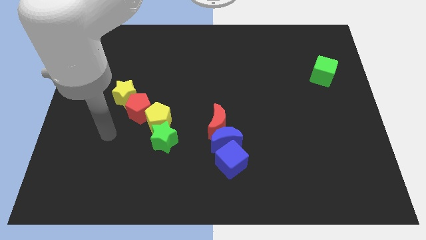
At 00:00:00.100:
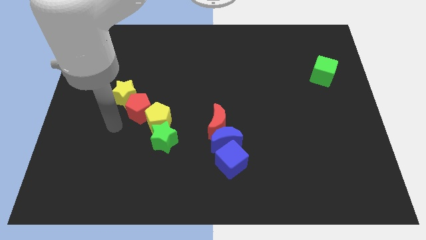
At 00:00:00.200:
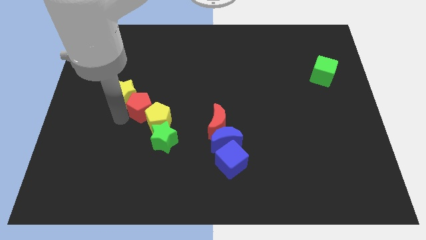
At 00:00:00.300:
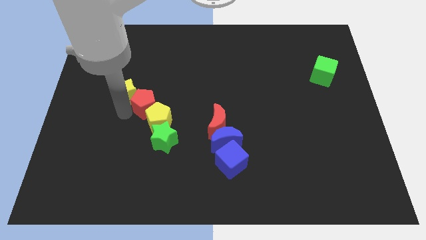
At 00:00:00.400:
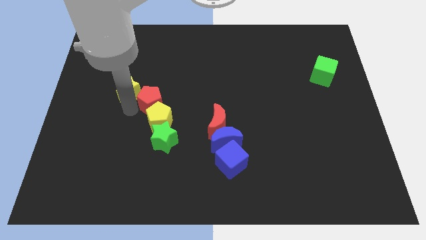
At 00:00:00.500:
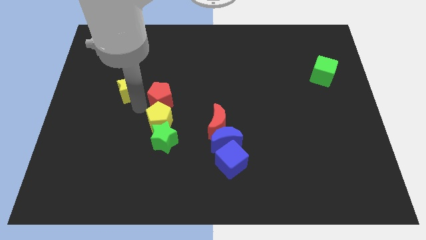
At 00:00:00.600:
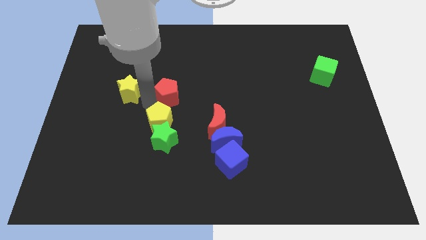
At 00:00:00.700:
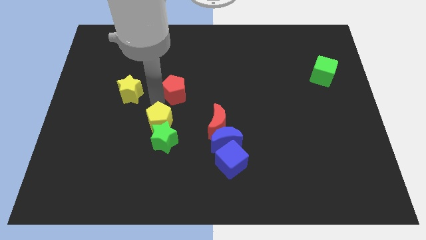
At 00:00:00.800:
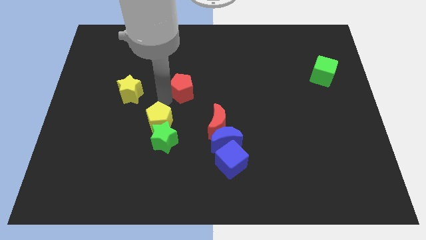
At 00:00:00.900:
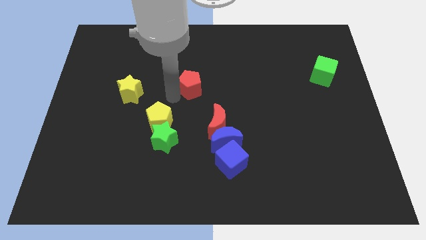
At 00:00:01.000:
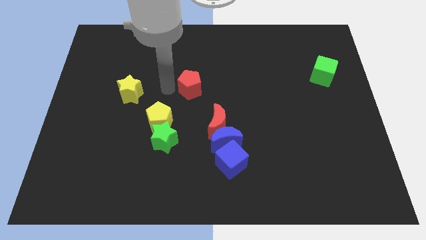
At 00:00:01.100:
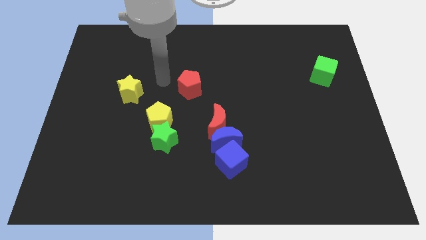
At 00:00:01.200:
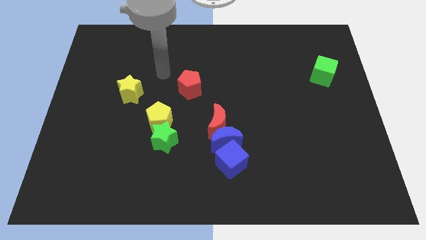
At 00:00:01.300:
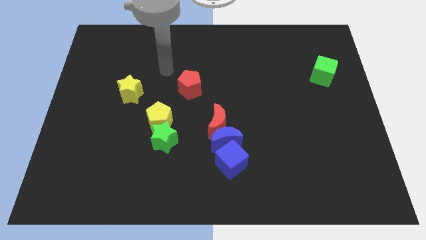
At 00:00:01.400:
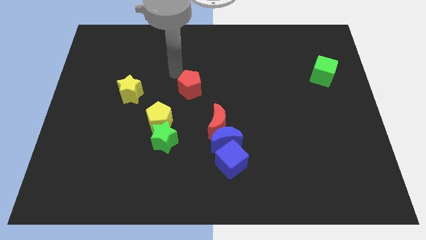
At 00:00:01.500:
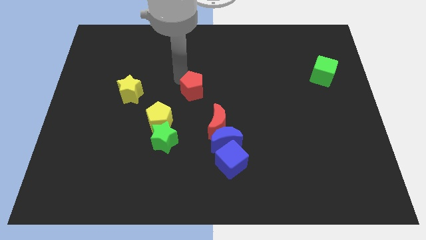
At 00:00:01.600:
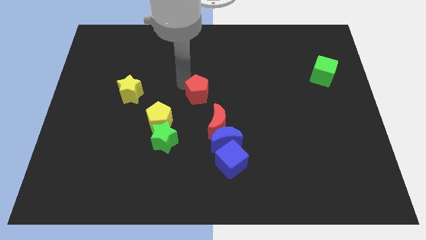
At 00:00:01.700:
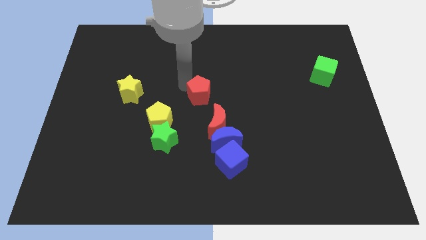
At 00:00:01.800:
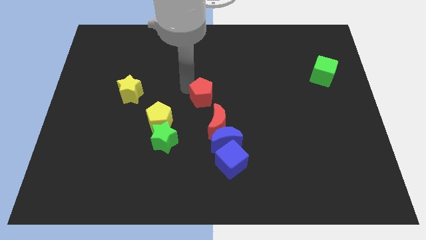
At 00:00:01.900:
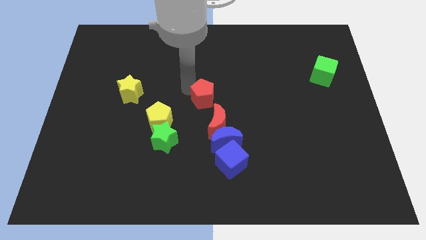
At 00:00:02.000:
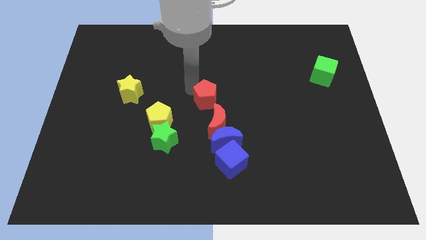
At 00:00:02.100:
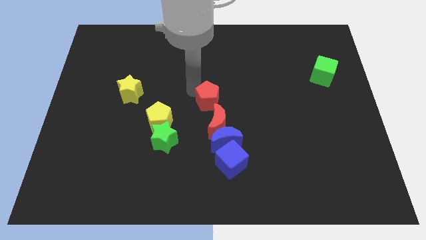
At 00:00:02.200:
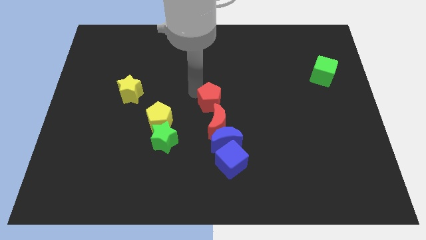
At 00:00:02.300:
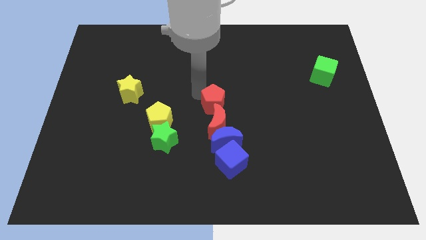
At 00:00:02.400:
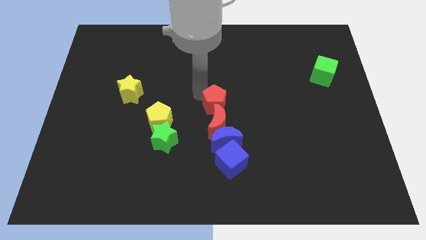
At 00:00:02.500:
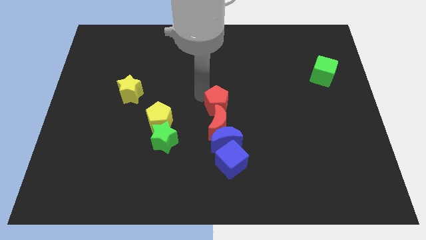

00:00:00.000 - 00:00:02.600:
move the red pentagon to the top of the red crescent

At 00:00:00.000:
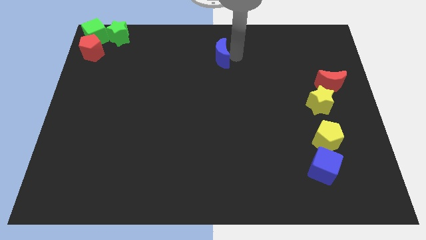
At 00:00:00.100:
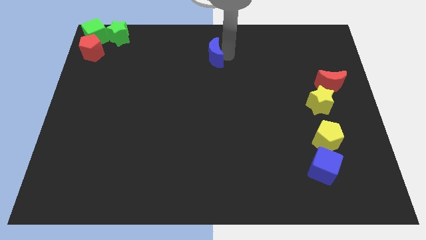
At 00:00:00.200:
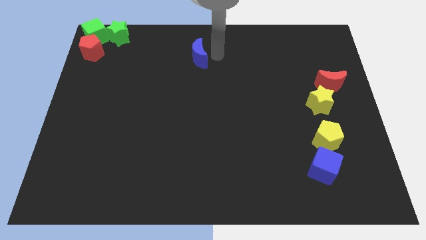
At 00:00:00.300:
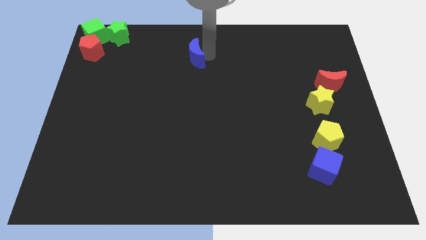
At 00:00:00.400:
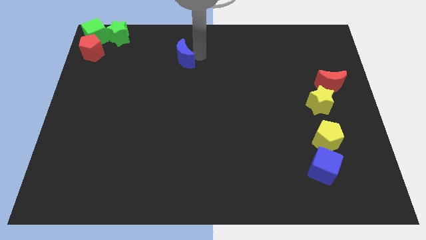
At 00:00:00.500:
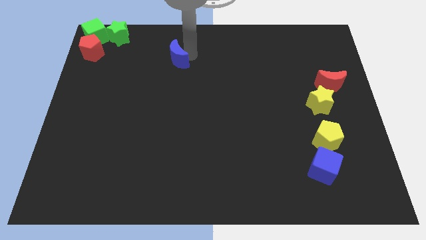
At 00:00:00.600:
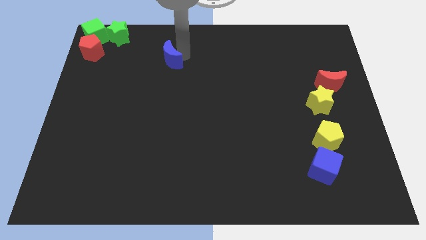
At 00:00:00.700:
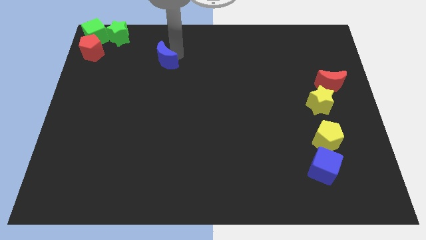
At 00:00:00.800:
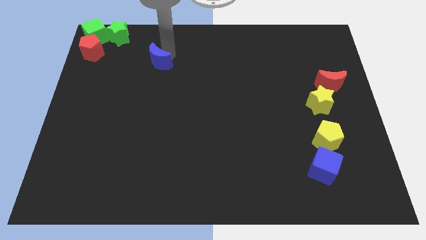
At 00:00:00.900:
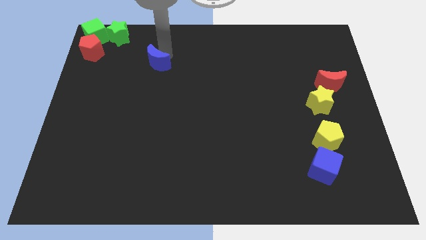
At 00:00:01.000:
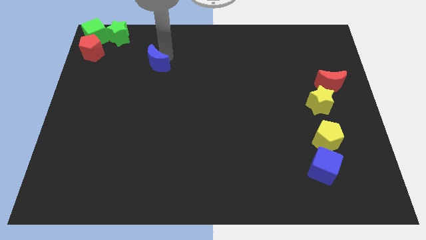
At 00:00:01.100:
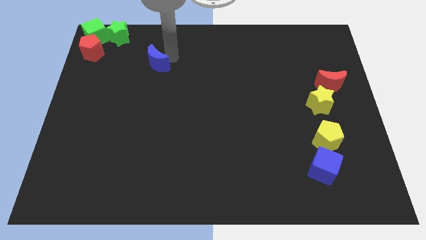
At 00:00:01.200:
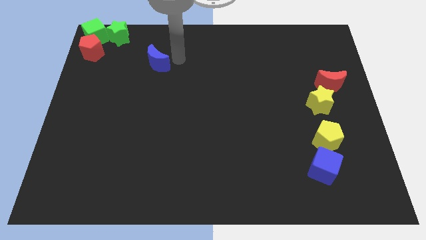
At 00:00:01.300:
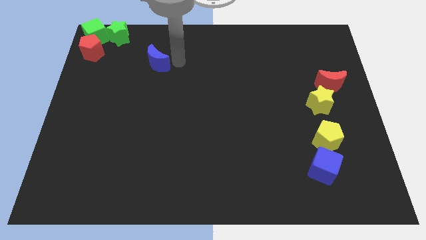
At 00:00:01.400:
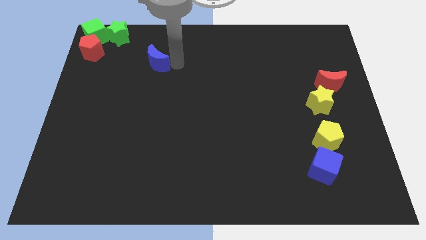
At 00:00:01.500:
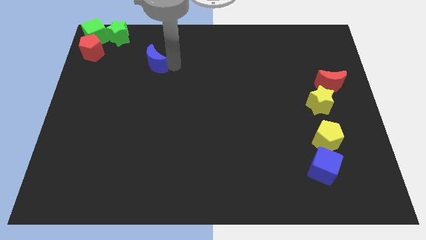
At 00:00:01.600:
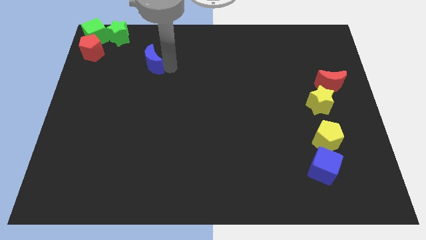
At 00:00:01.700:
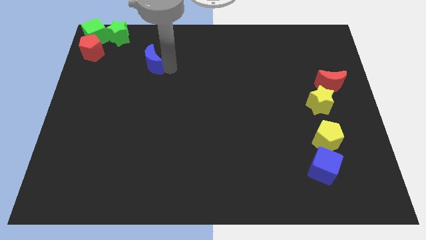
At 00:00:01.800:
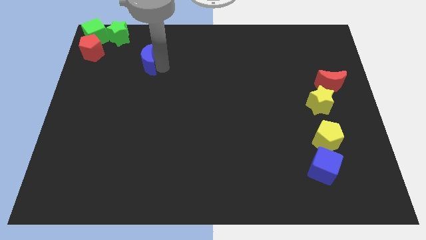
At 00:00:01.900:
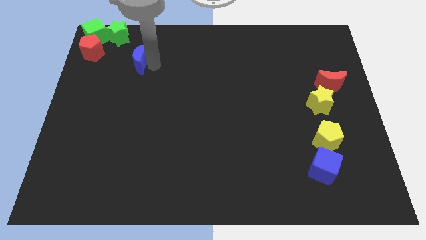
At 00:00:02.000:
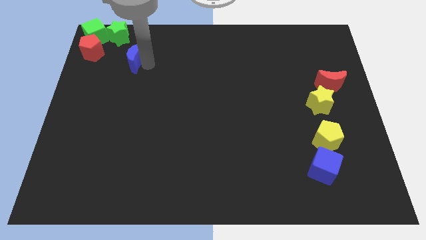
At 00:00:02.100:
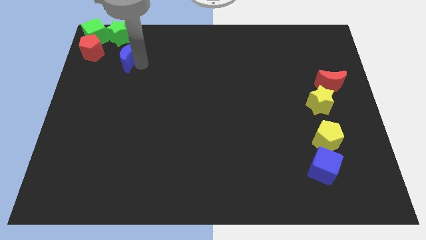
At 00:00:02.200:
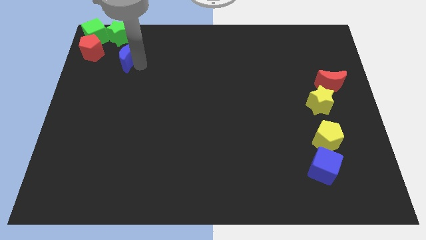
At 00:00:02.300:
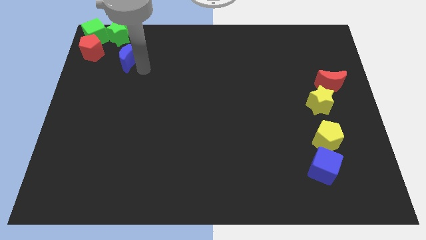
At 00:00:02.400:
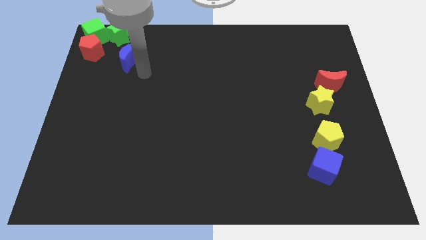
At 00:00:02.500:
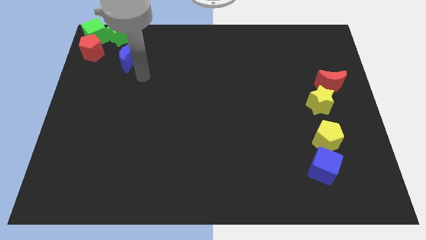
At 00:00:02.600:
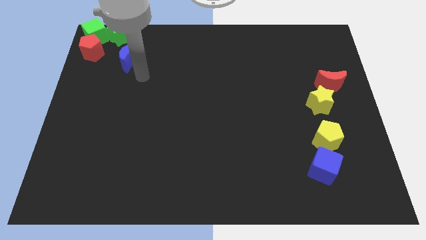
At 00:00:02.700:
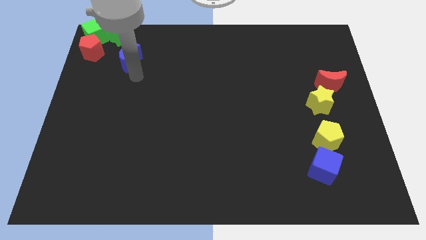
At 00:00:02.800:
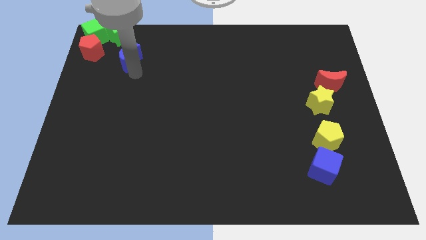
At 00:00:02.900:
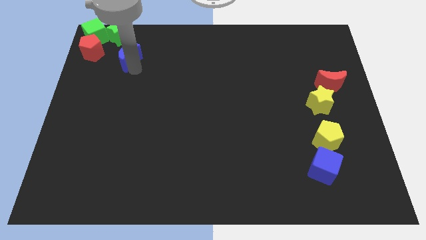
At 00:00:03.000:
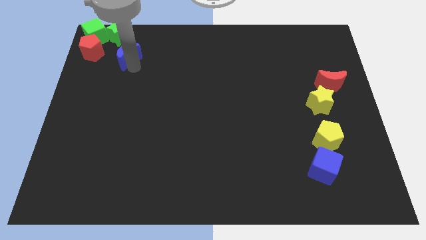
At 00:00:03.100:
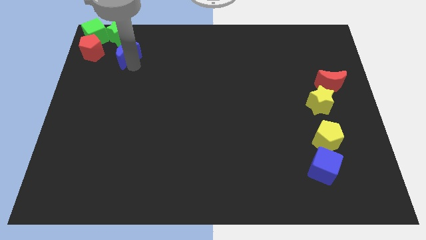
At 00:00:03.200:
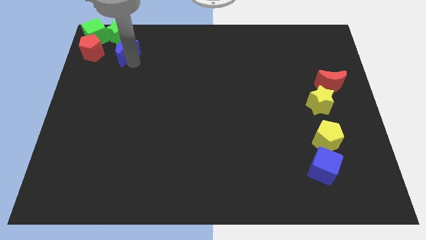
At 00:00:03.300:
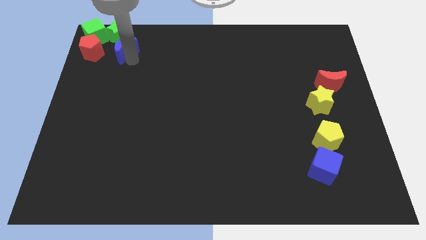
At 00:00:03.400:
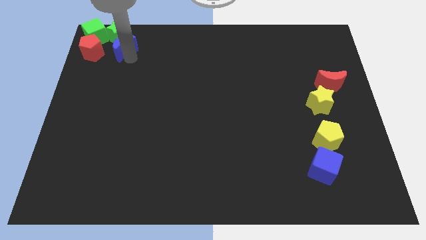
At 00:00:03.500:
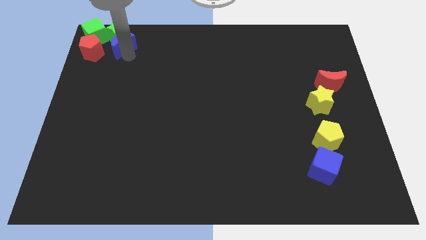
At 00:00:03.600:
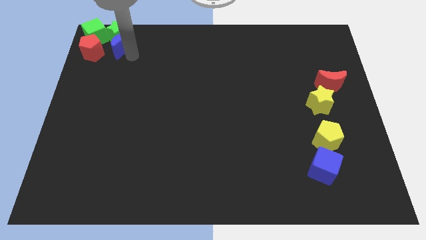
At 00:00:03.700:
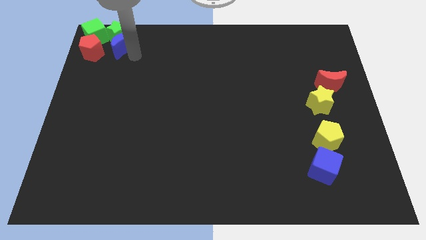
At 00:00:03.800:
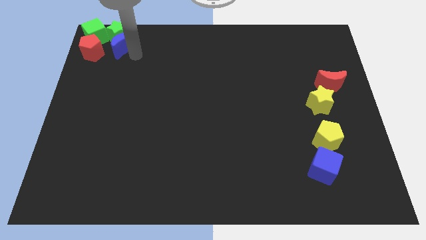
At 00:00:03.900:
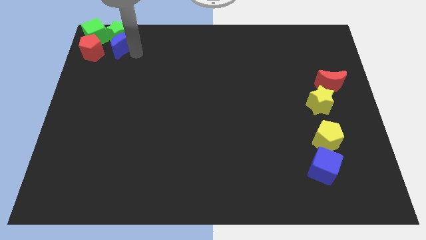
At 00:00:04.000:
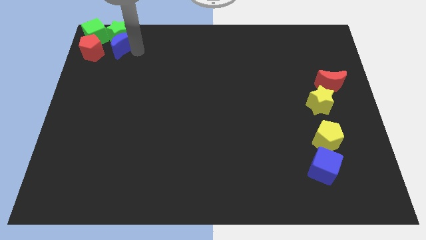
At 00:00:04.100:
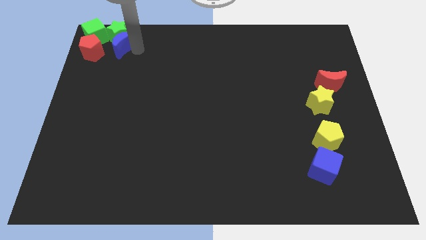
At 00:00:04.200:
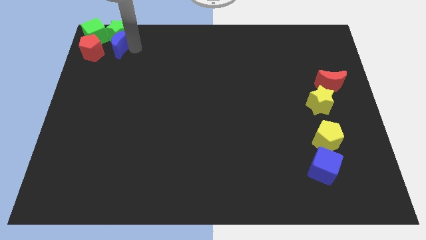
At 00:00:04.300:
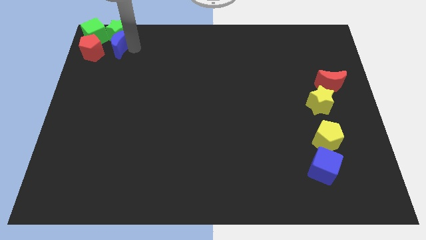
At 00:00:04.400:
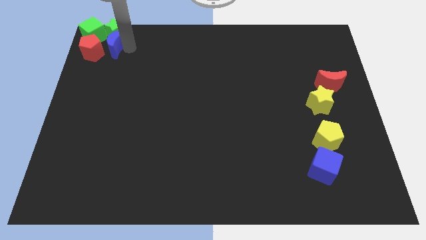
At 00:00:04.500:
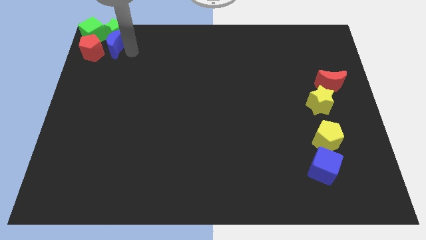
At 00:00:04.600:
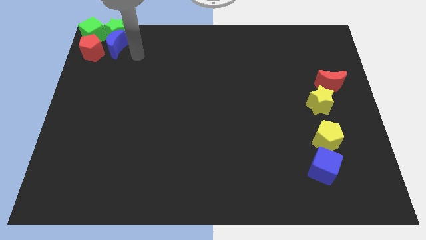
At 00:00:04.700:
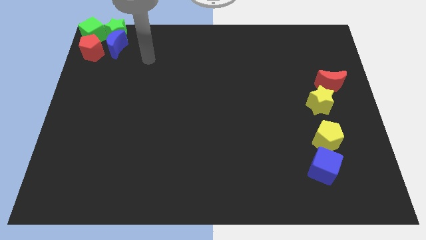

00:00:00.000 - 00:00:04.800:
push the blue crescent towards the right of the red pentagon

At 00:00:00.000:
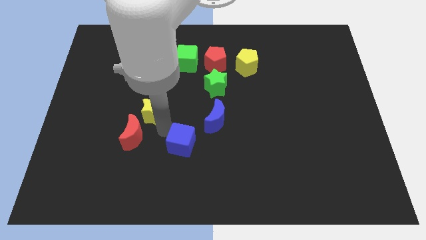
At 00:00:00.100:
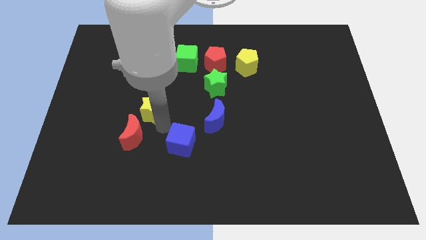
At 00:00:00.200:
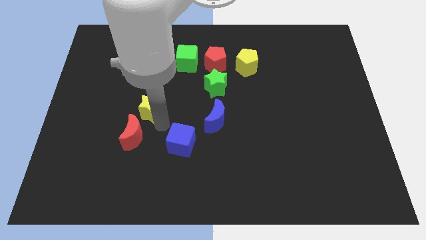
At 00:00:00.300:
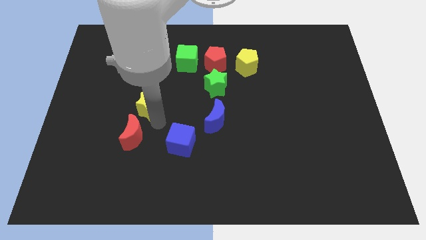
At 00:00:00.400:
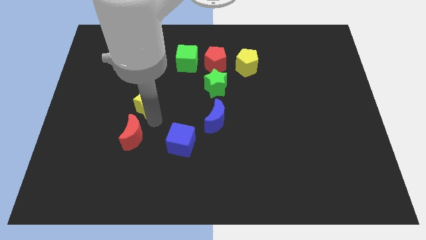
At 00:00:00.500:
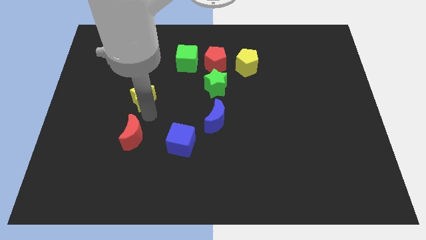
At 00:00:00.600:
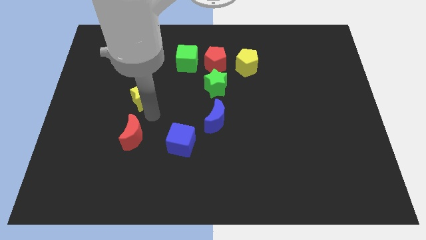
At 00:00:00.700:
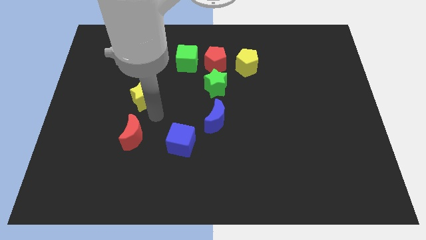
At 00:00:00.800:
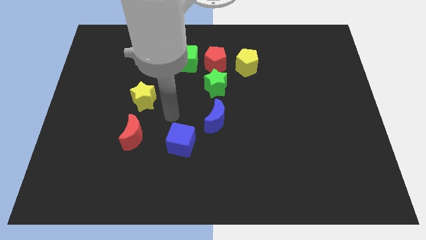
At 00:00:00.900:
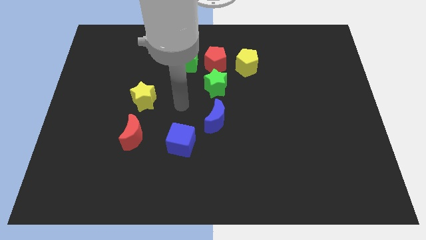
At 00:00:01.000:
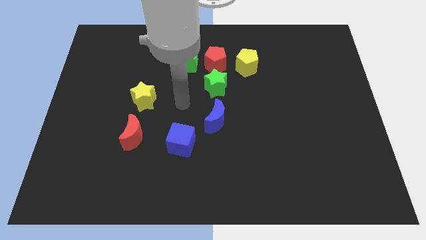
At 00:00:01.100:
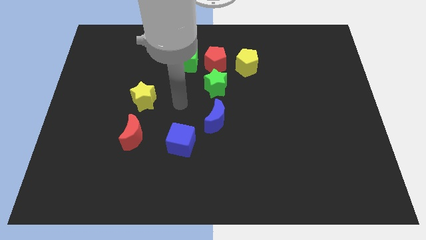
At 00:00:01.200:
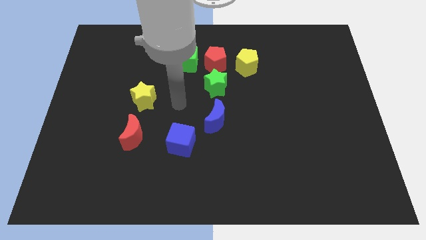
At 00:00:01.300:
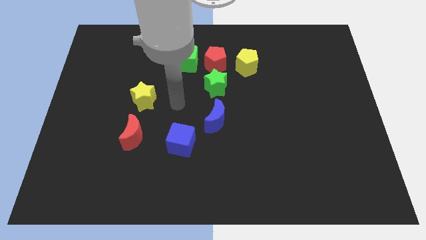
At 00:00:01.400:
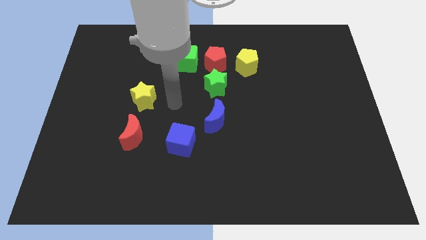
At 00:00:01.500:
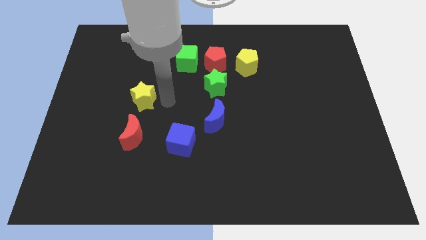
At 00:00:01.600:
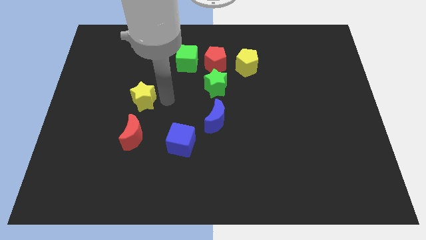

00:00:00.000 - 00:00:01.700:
move the yellow star to the top of red crescent
